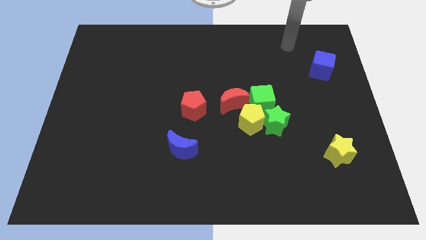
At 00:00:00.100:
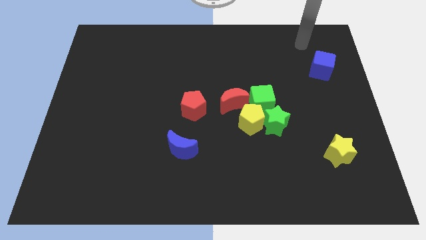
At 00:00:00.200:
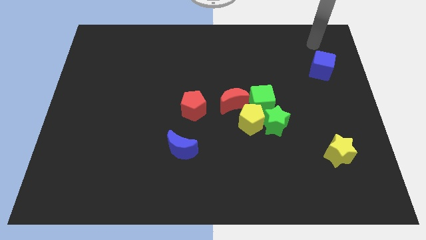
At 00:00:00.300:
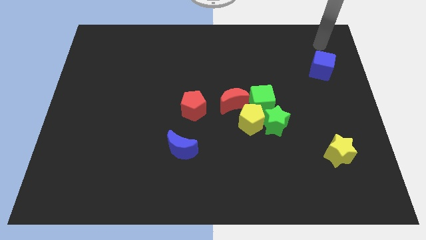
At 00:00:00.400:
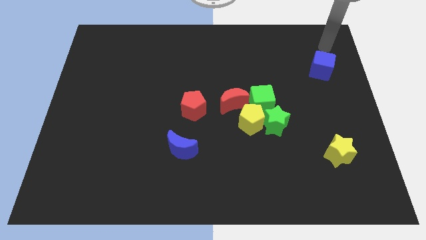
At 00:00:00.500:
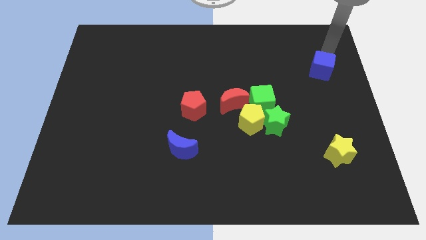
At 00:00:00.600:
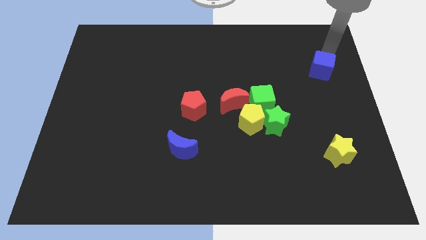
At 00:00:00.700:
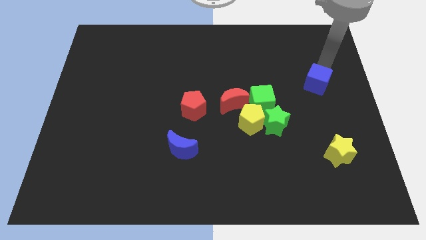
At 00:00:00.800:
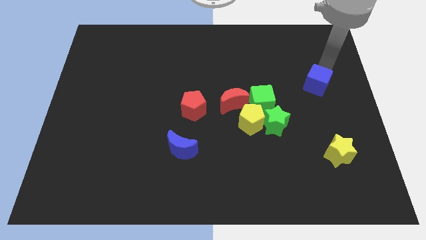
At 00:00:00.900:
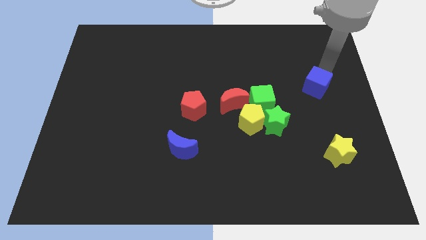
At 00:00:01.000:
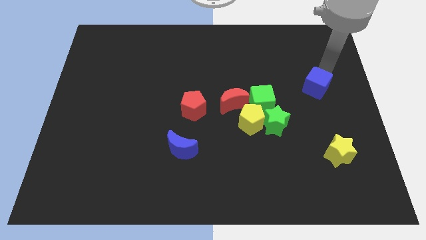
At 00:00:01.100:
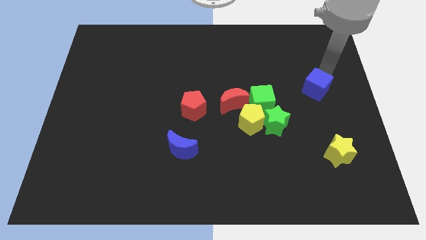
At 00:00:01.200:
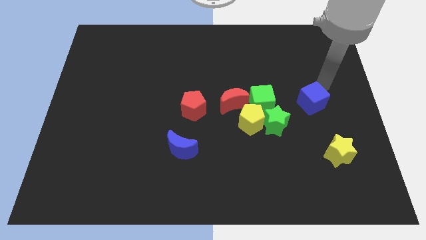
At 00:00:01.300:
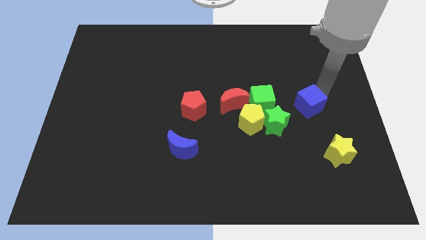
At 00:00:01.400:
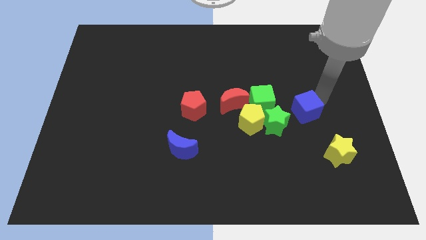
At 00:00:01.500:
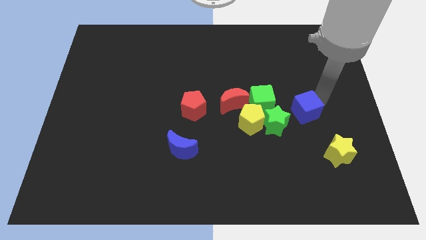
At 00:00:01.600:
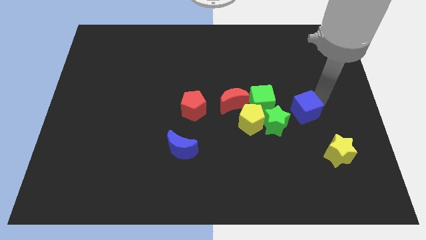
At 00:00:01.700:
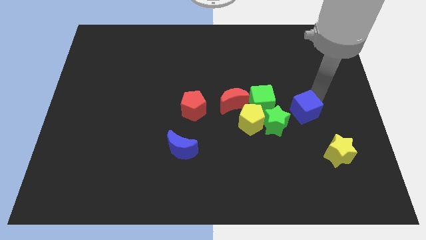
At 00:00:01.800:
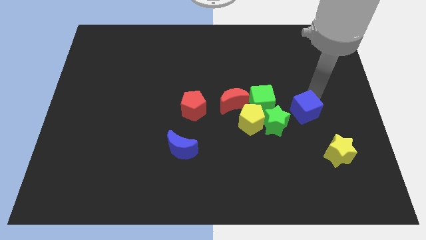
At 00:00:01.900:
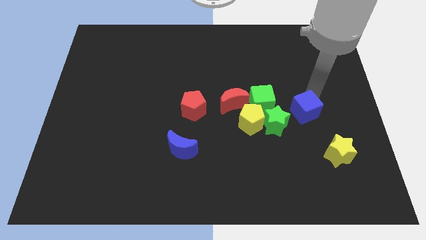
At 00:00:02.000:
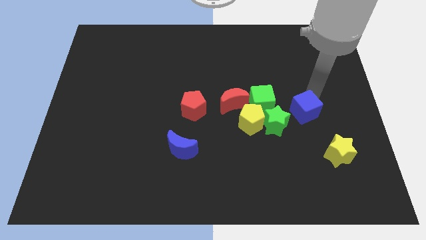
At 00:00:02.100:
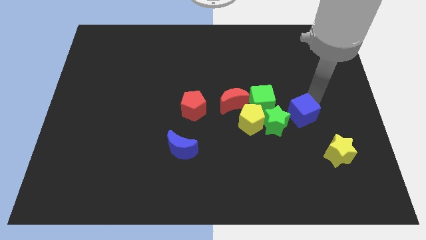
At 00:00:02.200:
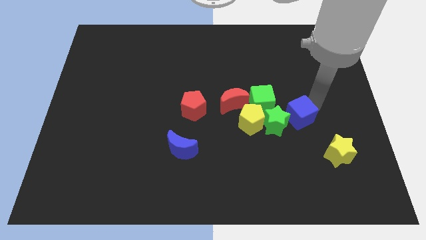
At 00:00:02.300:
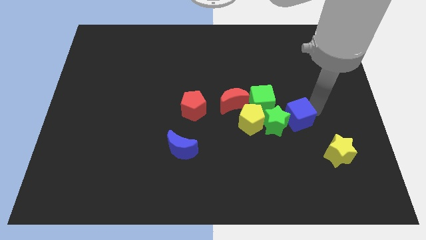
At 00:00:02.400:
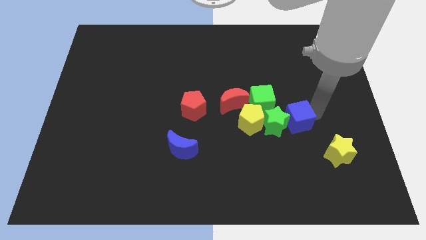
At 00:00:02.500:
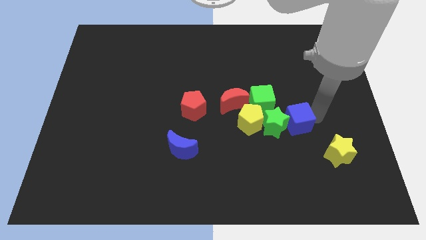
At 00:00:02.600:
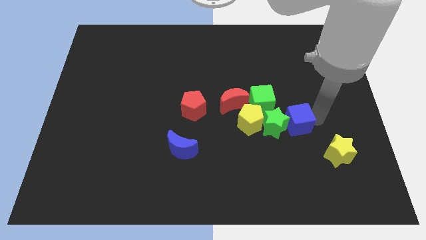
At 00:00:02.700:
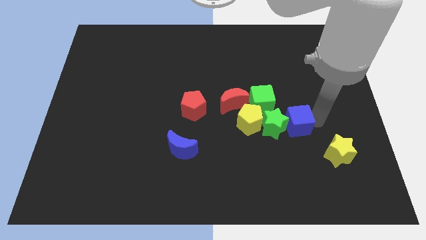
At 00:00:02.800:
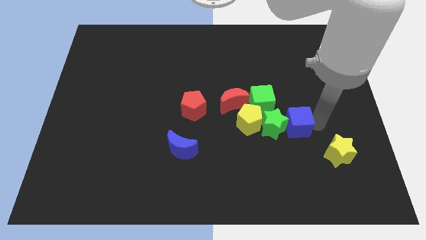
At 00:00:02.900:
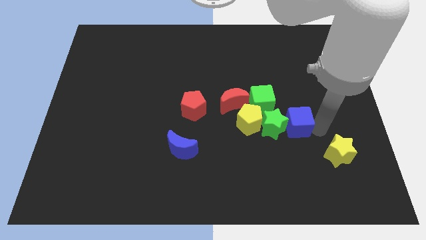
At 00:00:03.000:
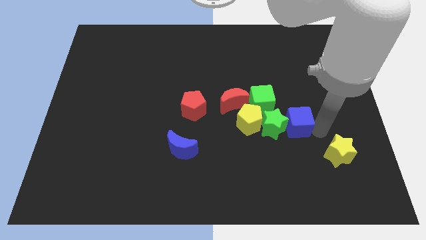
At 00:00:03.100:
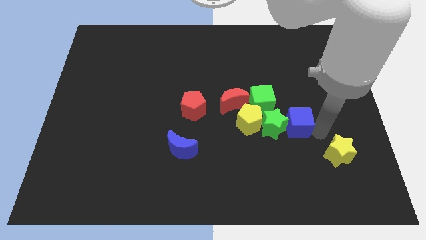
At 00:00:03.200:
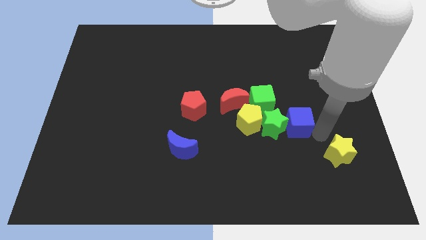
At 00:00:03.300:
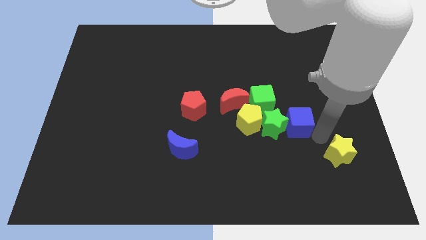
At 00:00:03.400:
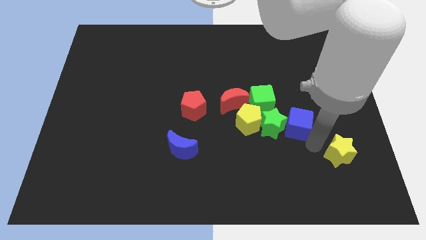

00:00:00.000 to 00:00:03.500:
move the blue cube into the green star

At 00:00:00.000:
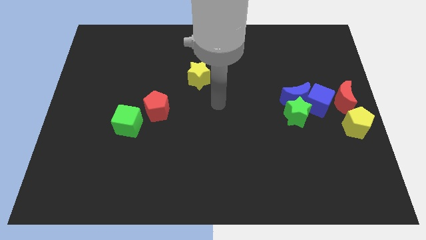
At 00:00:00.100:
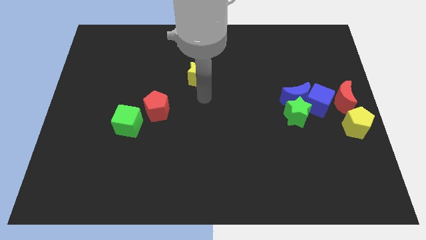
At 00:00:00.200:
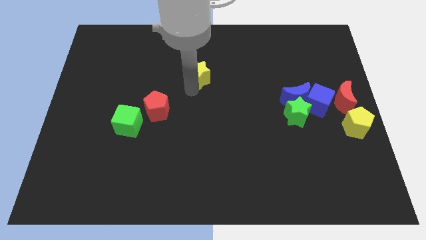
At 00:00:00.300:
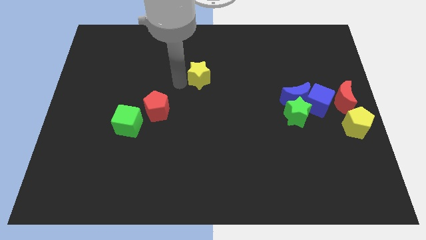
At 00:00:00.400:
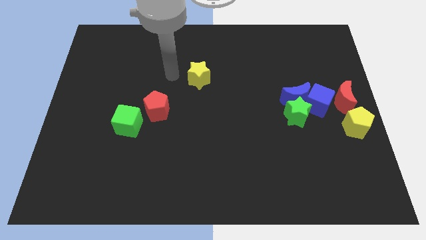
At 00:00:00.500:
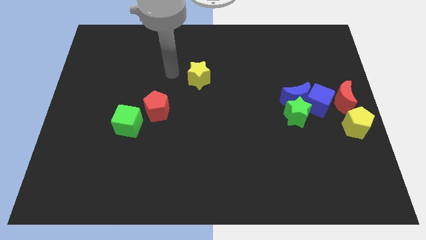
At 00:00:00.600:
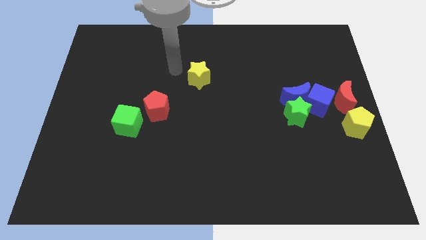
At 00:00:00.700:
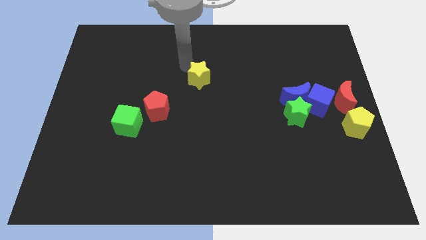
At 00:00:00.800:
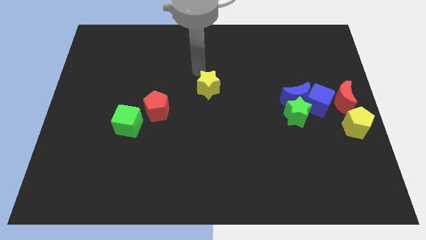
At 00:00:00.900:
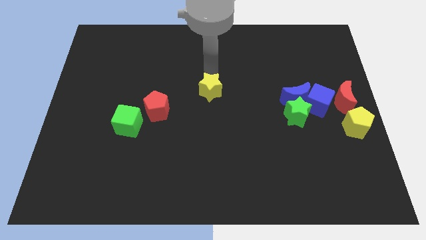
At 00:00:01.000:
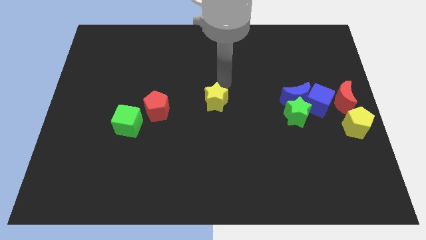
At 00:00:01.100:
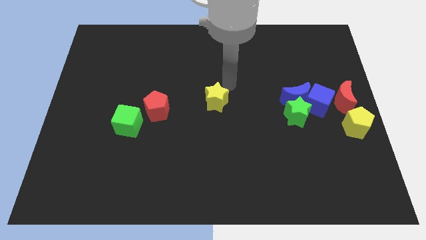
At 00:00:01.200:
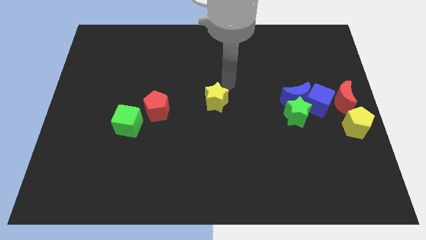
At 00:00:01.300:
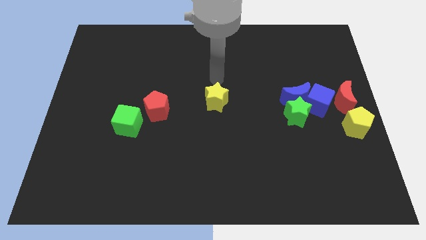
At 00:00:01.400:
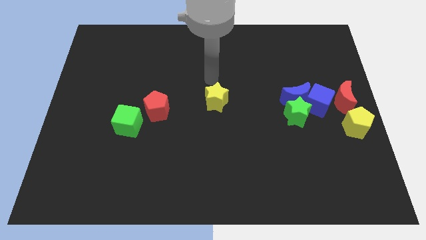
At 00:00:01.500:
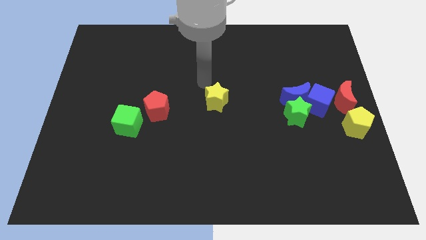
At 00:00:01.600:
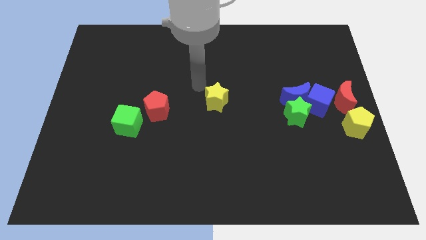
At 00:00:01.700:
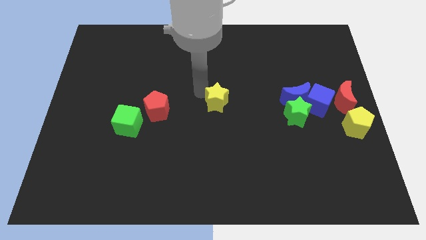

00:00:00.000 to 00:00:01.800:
move the yellow star towards the center of the board

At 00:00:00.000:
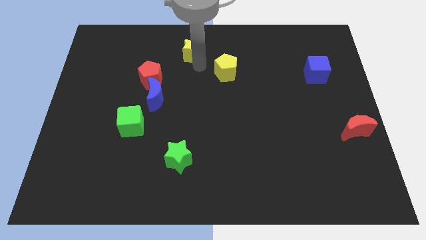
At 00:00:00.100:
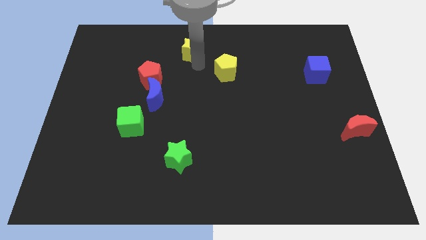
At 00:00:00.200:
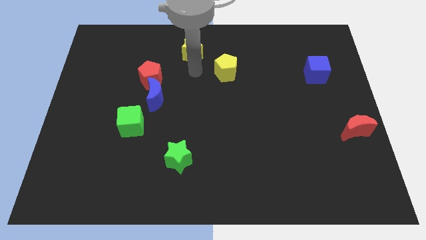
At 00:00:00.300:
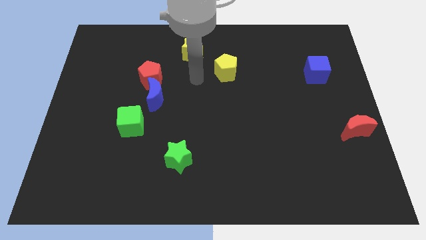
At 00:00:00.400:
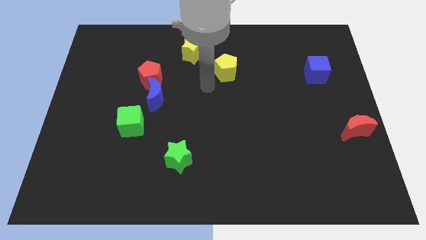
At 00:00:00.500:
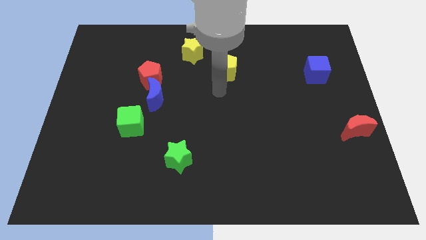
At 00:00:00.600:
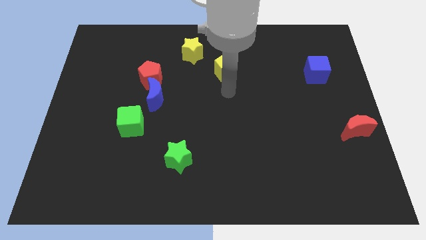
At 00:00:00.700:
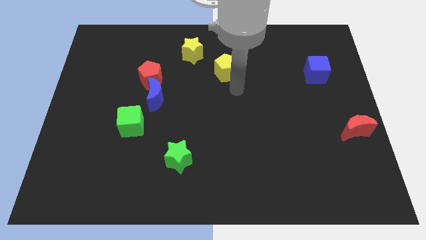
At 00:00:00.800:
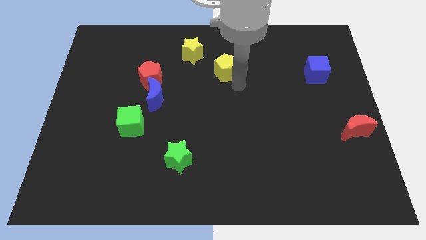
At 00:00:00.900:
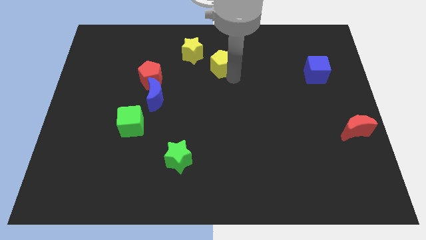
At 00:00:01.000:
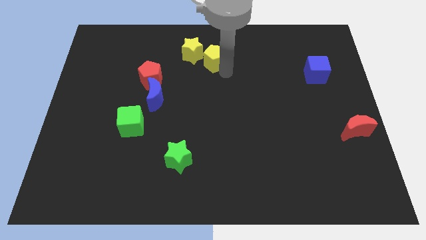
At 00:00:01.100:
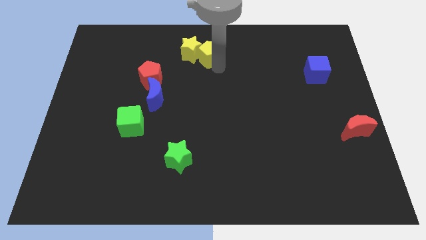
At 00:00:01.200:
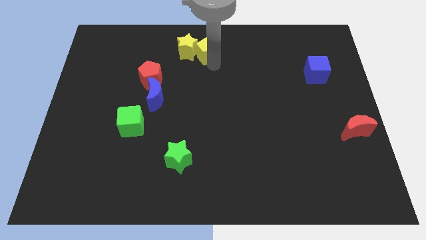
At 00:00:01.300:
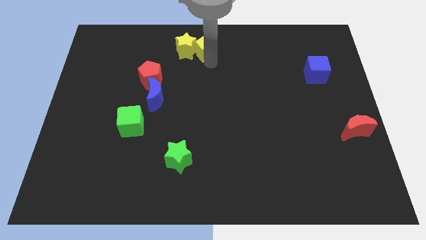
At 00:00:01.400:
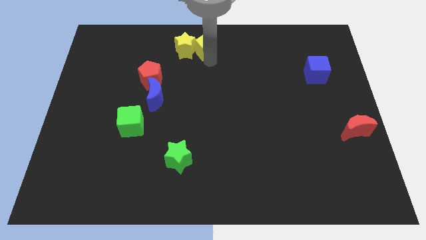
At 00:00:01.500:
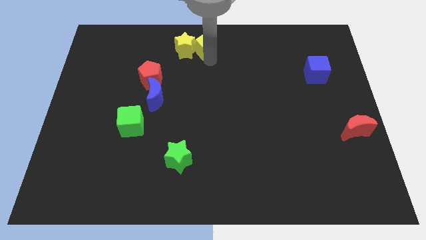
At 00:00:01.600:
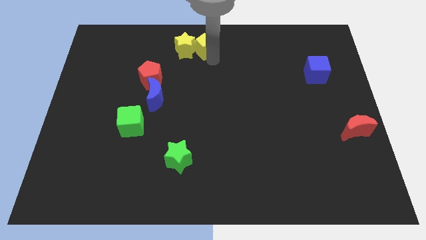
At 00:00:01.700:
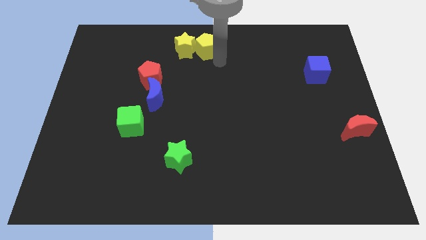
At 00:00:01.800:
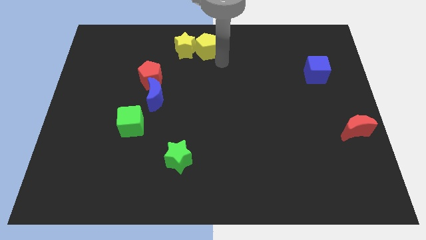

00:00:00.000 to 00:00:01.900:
push the yellow blocks to the top side of the board

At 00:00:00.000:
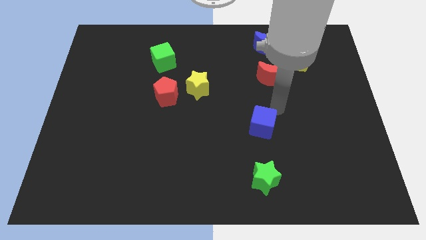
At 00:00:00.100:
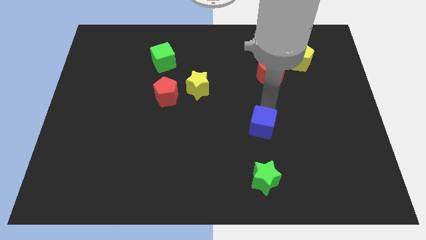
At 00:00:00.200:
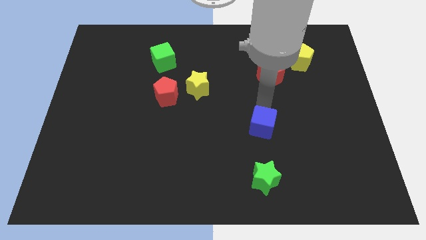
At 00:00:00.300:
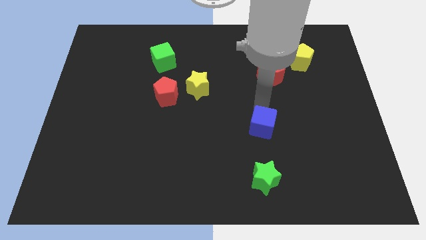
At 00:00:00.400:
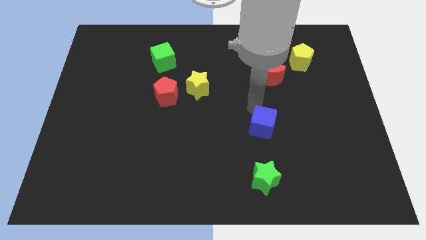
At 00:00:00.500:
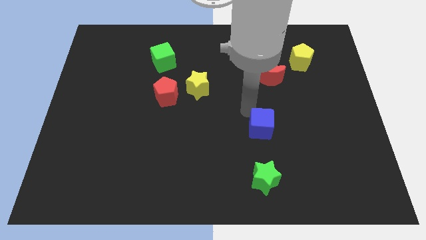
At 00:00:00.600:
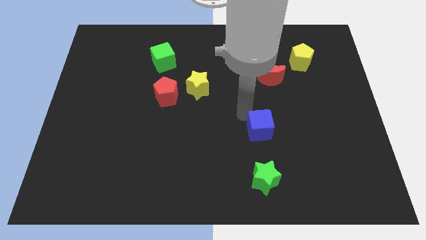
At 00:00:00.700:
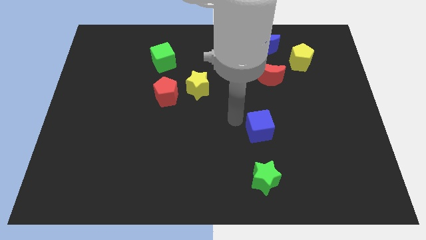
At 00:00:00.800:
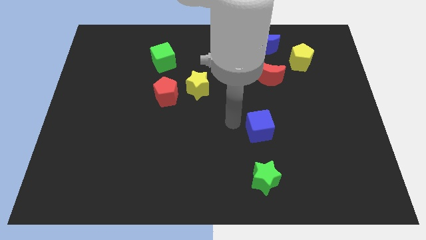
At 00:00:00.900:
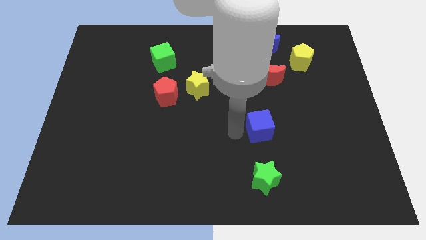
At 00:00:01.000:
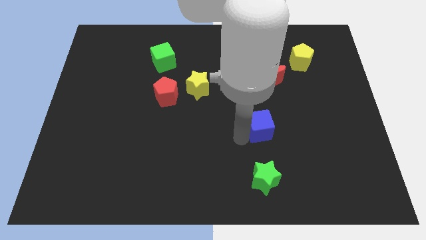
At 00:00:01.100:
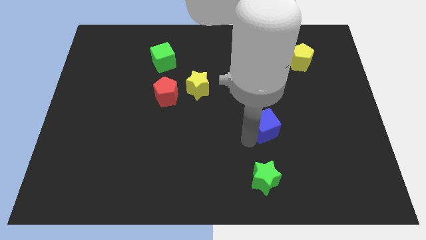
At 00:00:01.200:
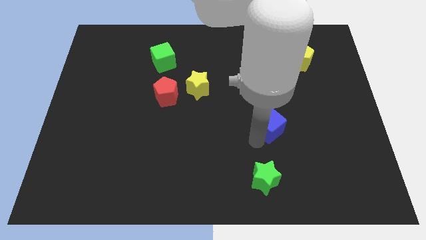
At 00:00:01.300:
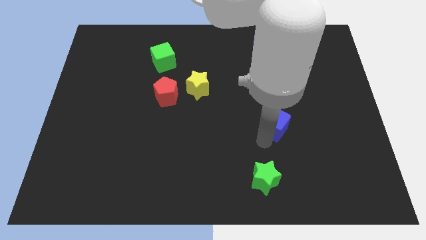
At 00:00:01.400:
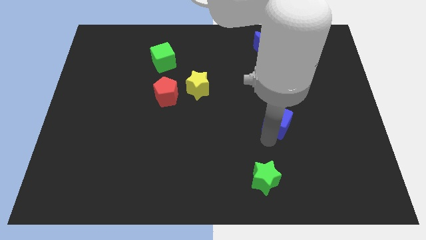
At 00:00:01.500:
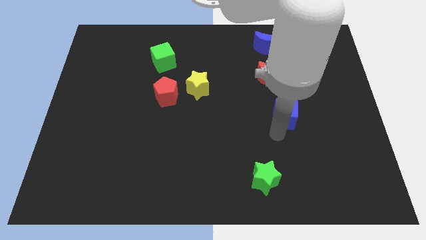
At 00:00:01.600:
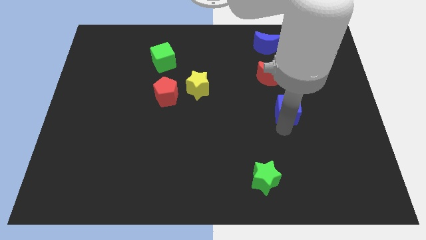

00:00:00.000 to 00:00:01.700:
move blue cube below red moon
